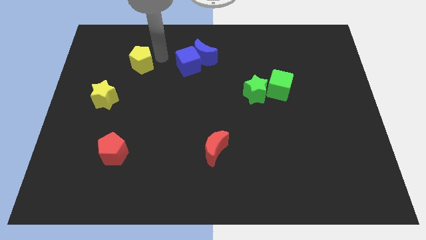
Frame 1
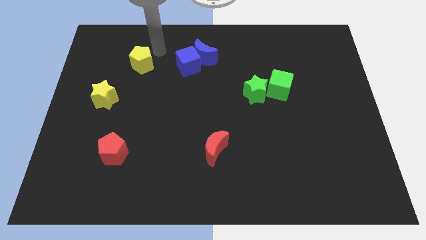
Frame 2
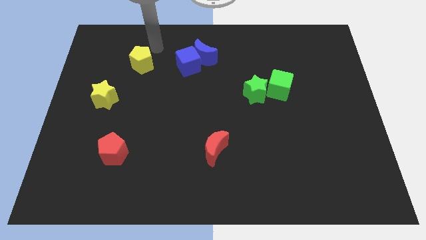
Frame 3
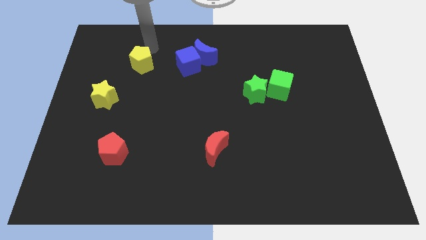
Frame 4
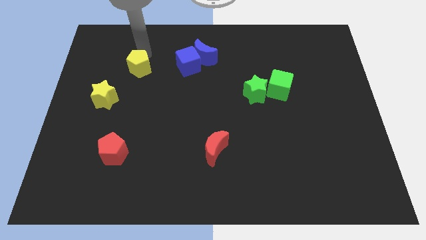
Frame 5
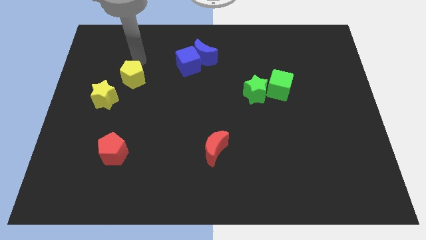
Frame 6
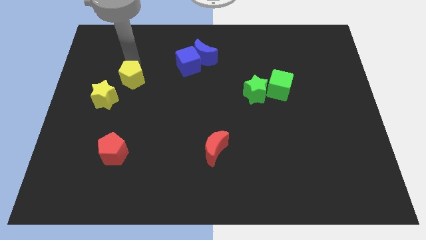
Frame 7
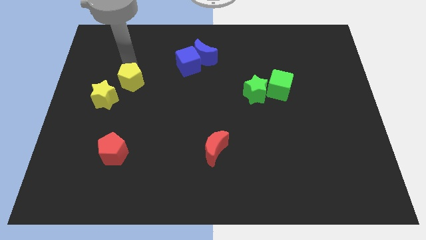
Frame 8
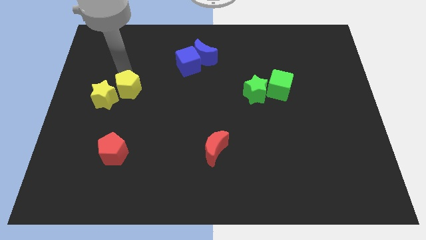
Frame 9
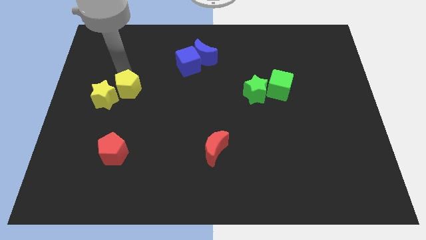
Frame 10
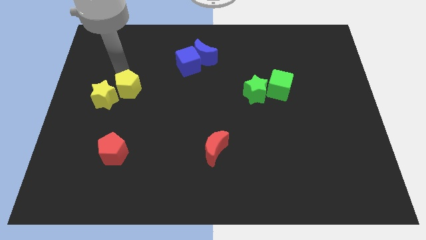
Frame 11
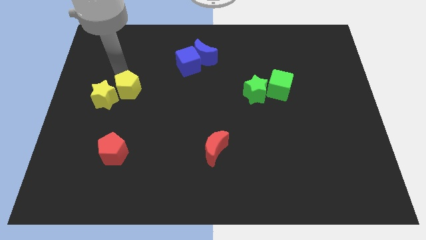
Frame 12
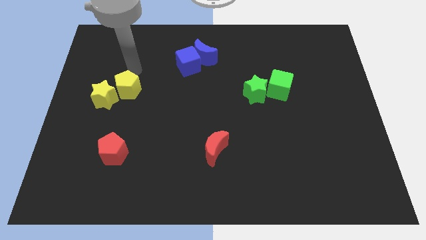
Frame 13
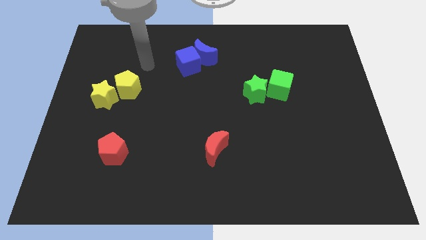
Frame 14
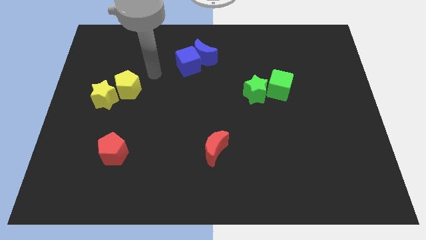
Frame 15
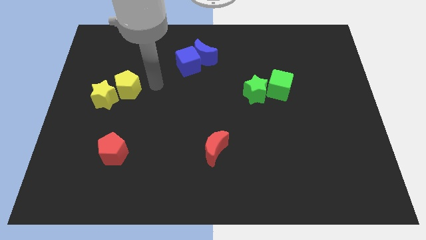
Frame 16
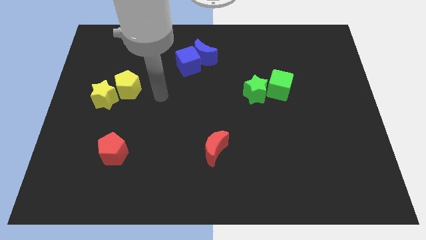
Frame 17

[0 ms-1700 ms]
slide the yellow pentagon to the top right side of the yellow star

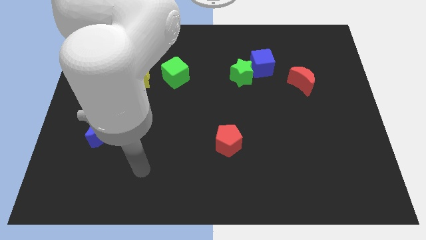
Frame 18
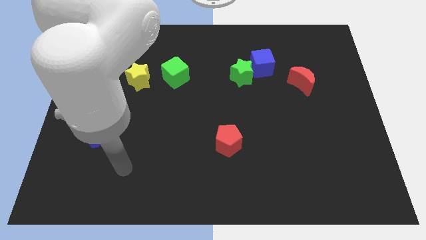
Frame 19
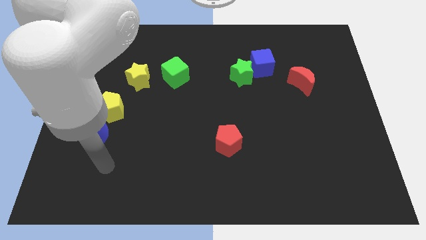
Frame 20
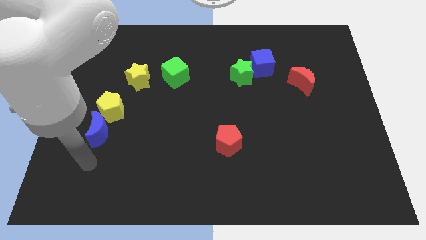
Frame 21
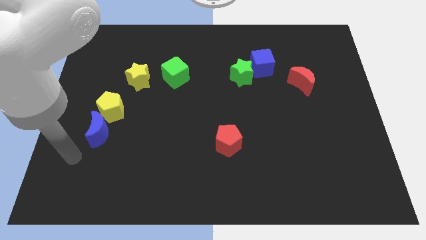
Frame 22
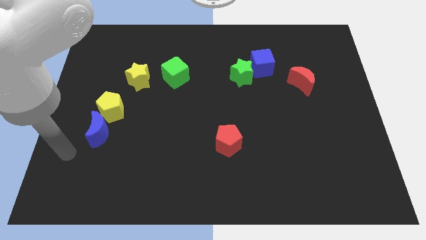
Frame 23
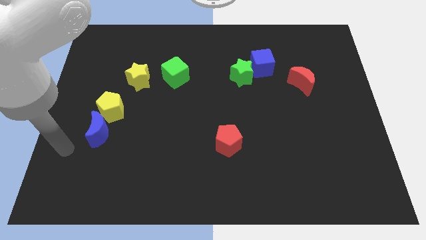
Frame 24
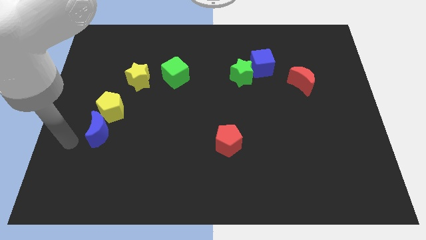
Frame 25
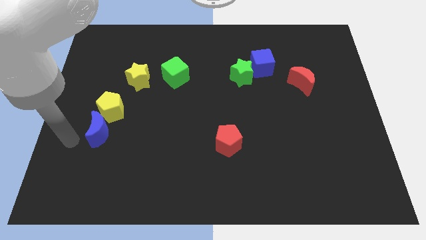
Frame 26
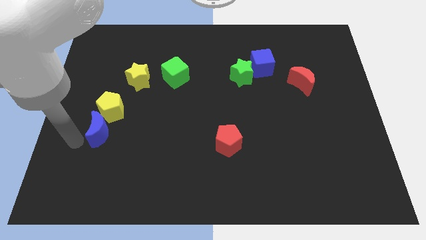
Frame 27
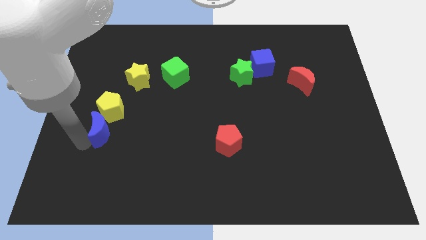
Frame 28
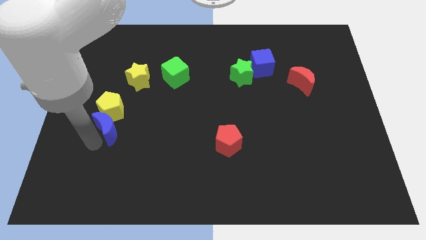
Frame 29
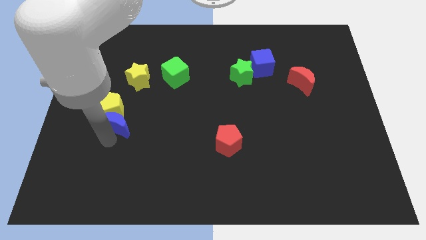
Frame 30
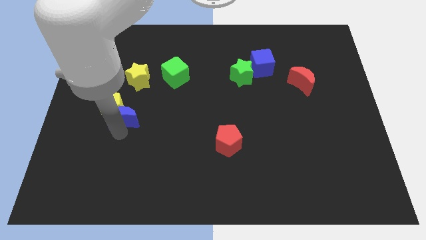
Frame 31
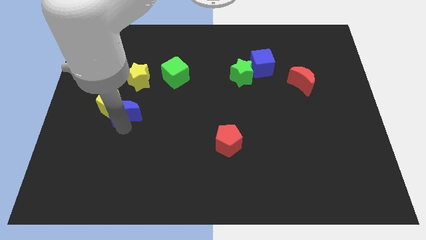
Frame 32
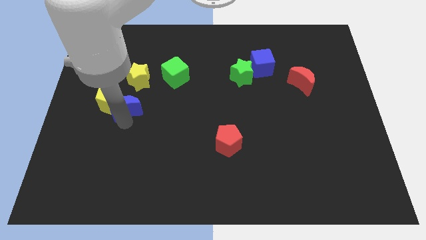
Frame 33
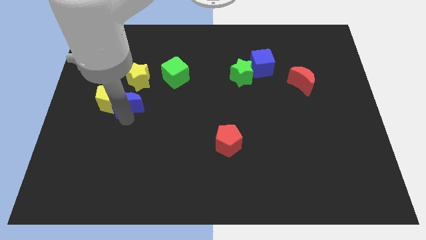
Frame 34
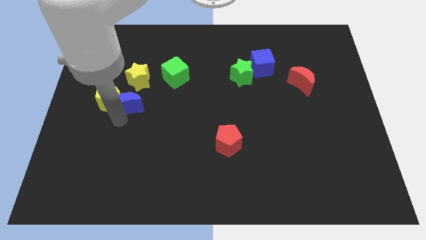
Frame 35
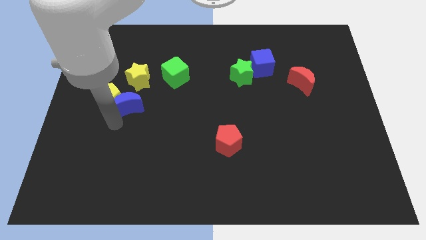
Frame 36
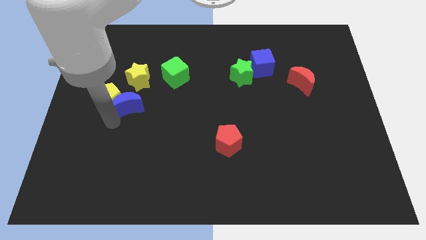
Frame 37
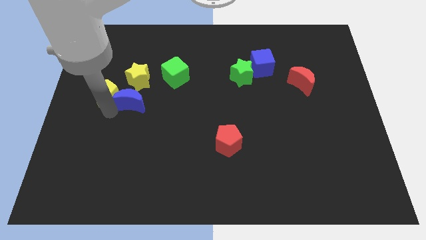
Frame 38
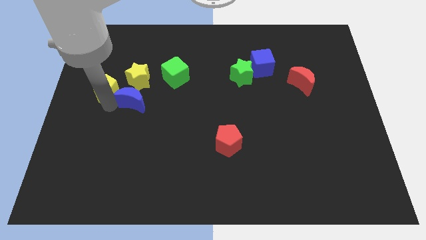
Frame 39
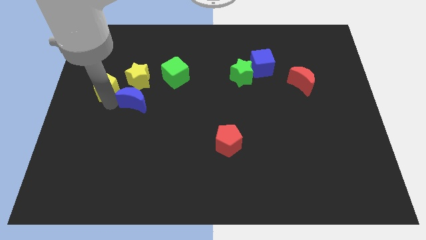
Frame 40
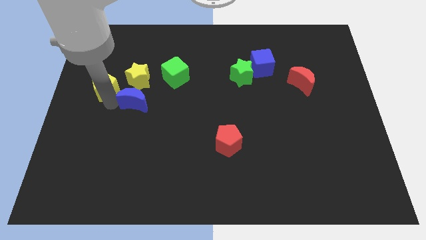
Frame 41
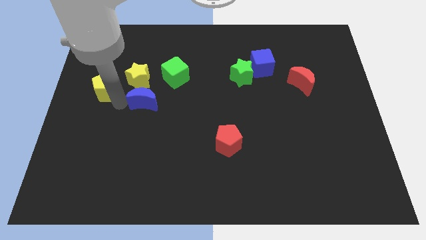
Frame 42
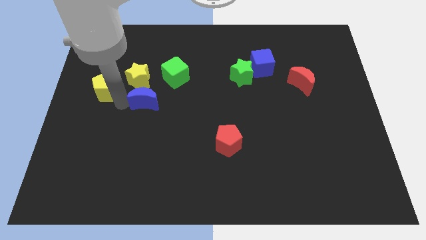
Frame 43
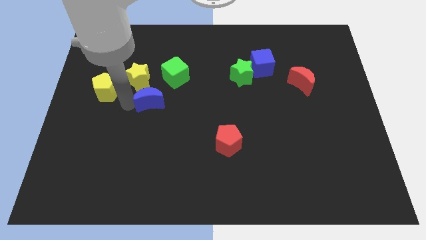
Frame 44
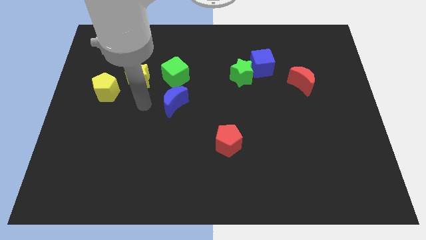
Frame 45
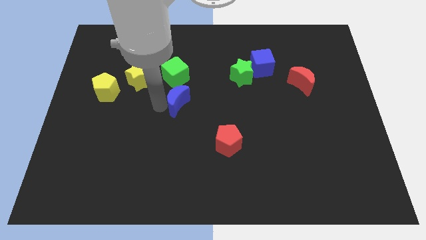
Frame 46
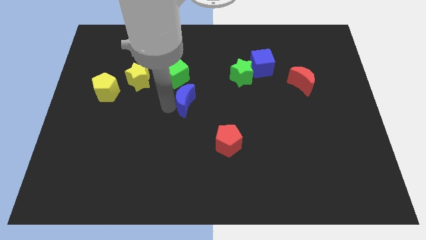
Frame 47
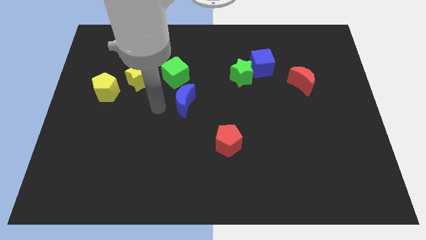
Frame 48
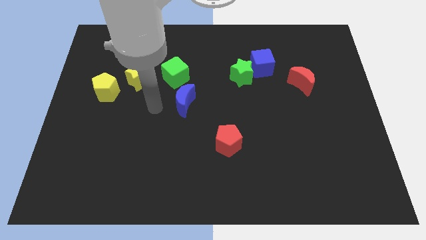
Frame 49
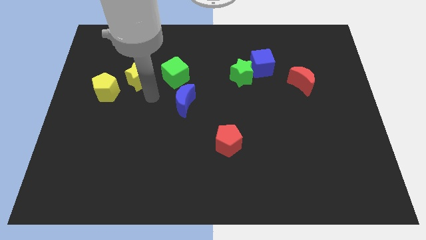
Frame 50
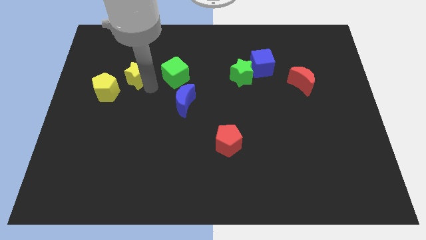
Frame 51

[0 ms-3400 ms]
separate blue moon from the yellow pentagon

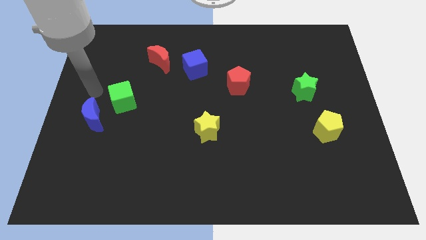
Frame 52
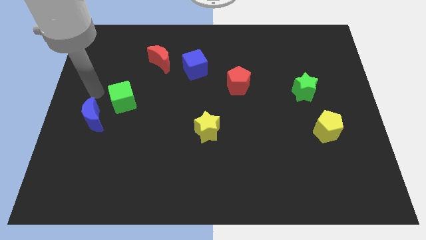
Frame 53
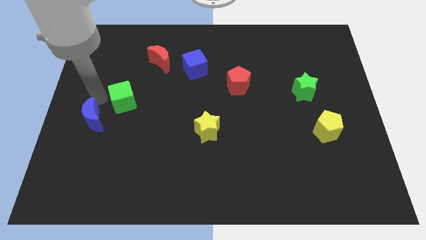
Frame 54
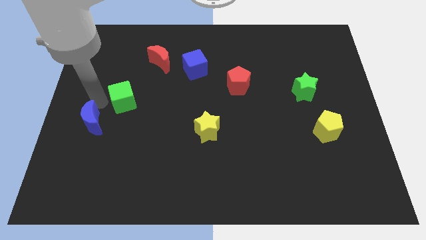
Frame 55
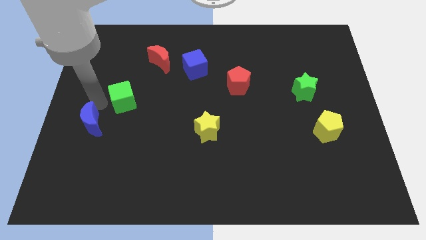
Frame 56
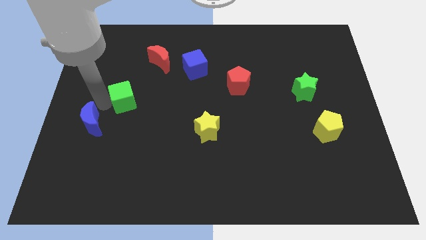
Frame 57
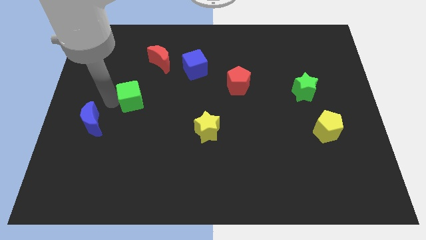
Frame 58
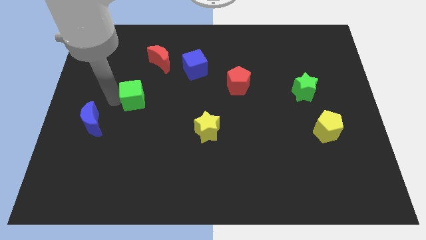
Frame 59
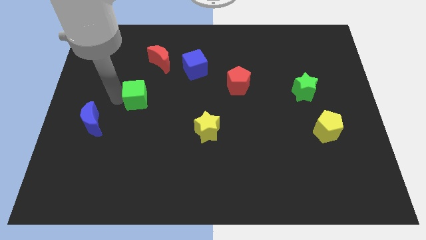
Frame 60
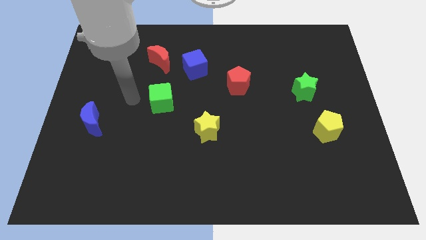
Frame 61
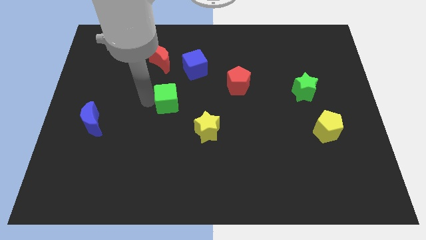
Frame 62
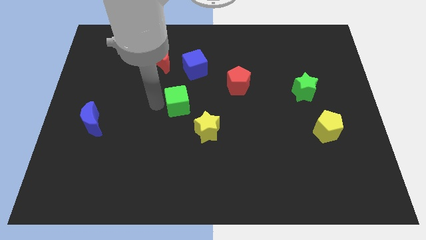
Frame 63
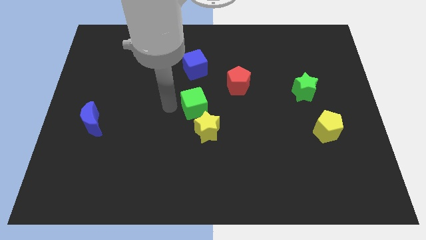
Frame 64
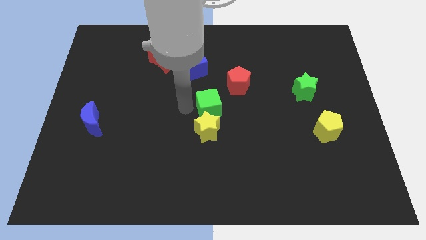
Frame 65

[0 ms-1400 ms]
move the green cube to the top side of the yellow star

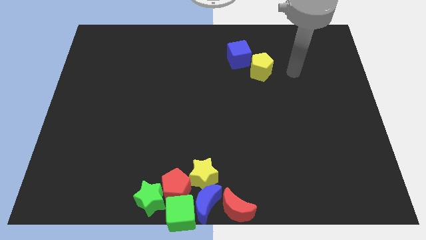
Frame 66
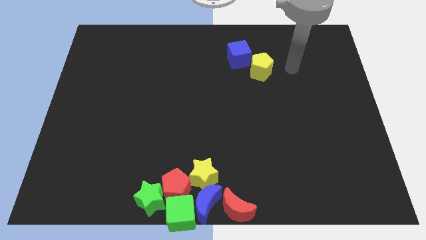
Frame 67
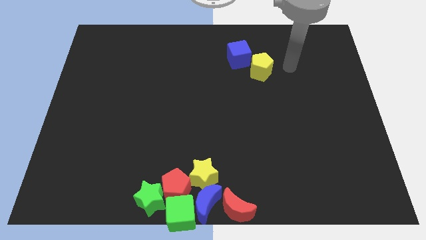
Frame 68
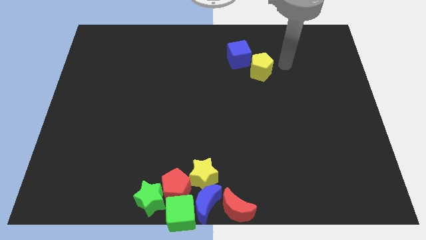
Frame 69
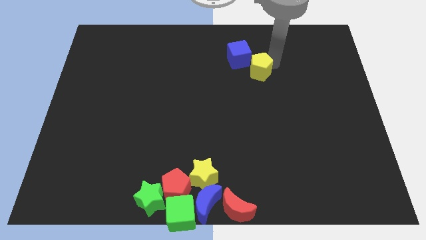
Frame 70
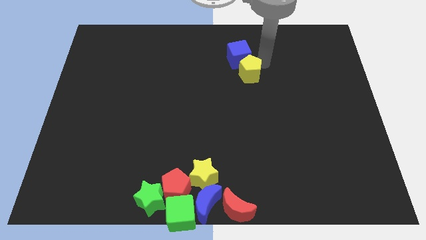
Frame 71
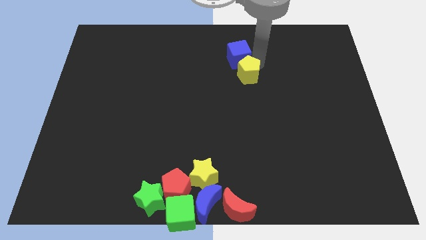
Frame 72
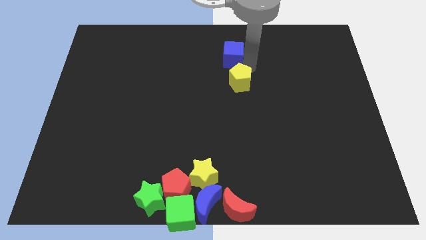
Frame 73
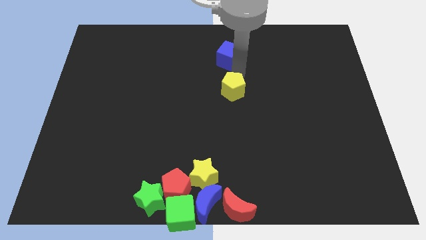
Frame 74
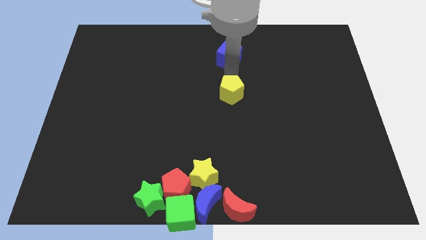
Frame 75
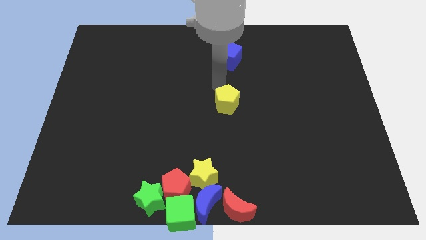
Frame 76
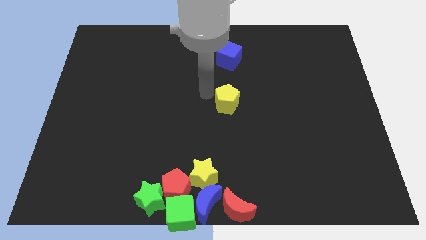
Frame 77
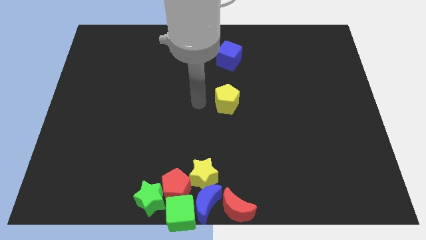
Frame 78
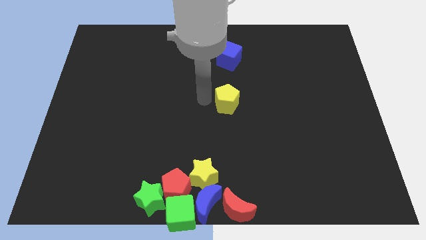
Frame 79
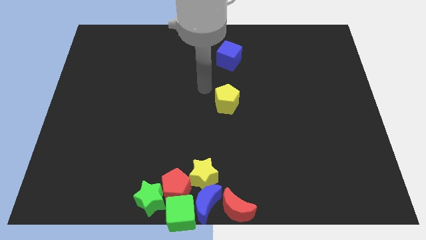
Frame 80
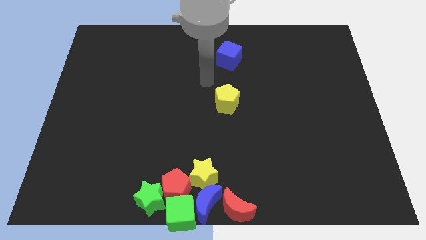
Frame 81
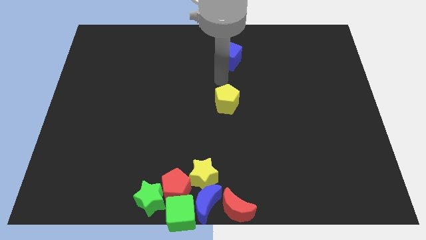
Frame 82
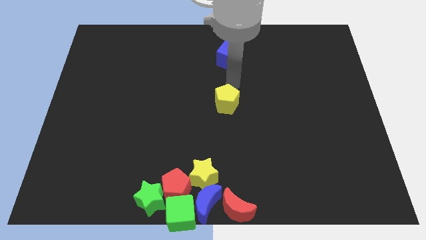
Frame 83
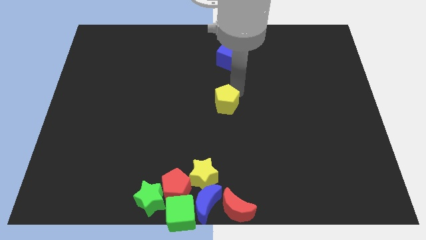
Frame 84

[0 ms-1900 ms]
apart yellow pentagon and blue cube

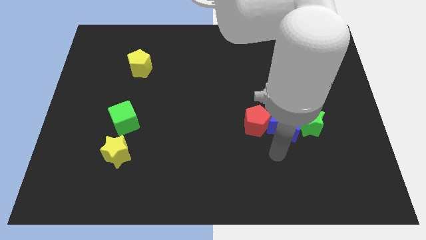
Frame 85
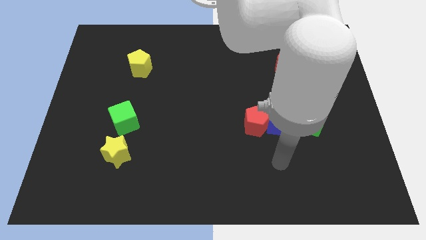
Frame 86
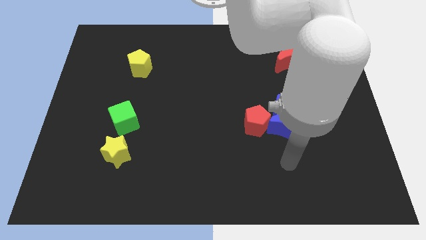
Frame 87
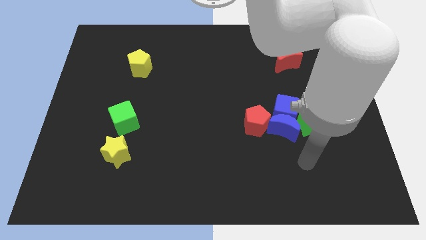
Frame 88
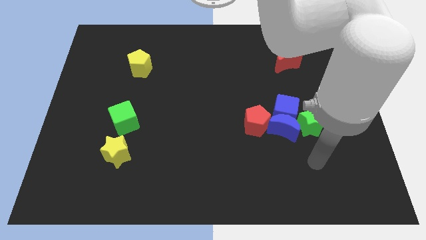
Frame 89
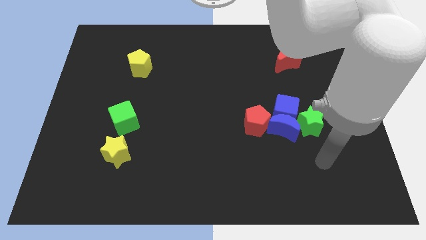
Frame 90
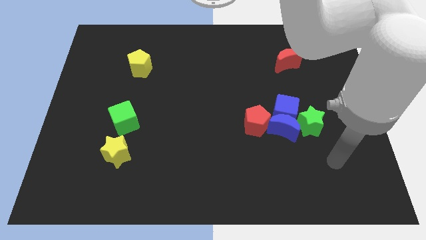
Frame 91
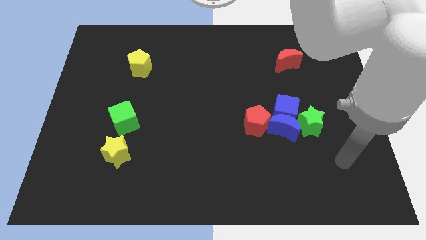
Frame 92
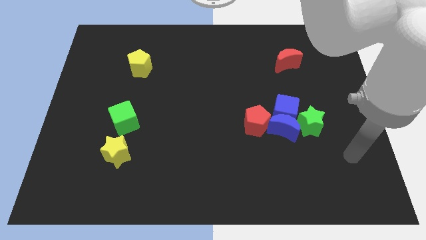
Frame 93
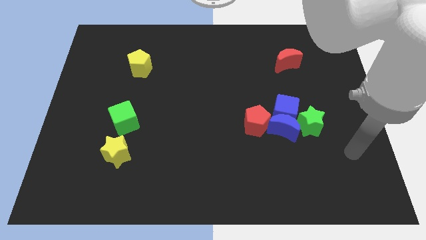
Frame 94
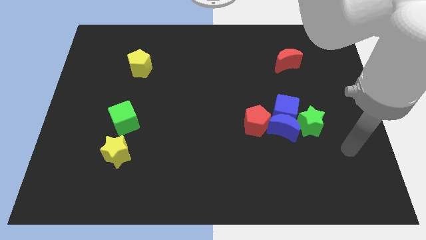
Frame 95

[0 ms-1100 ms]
move away from the blue moon
